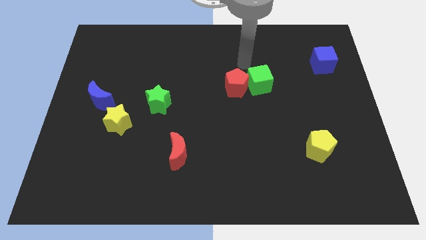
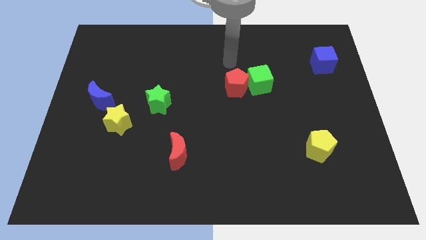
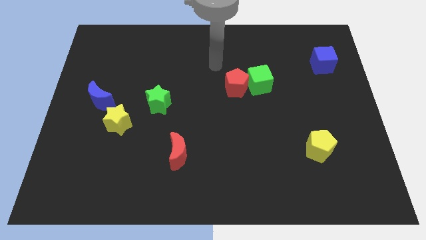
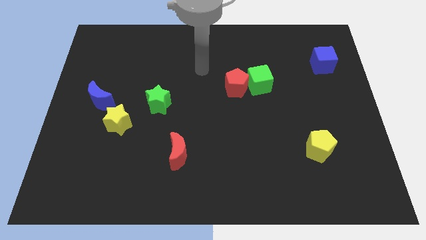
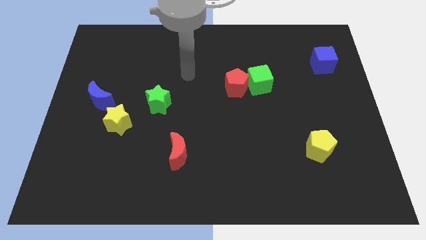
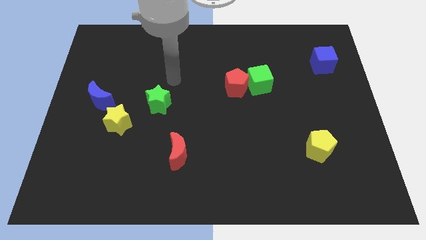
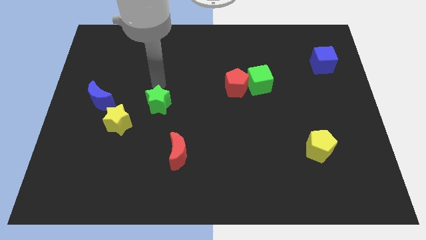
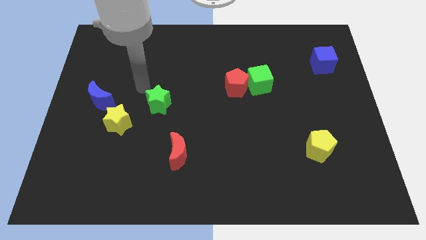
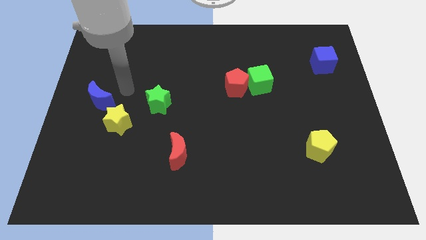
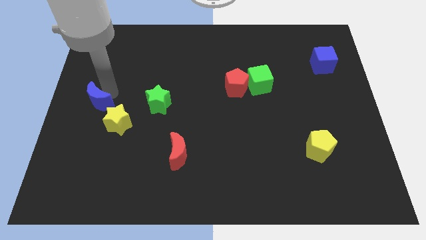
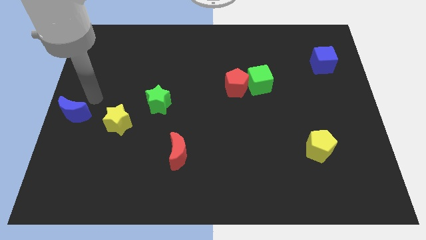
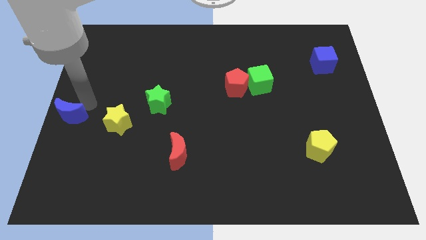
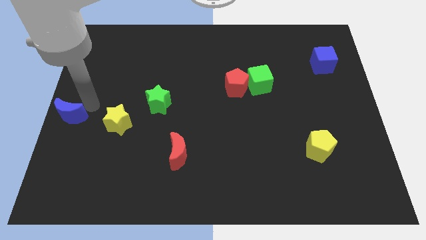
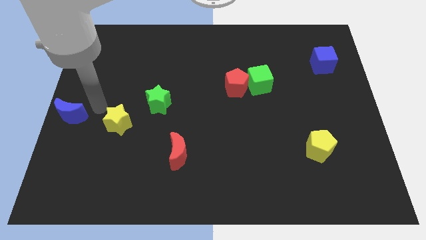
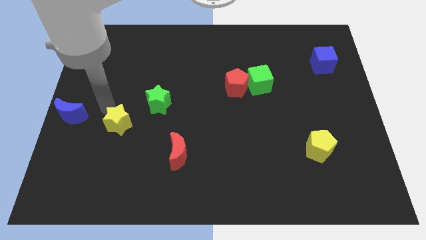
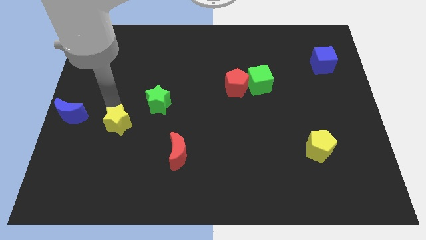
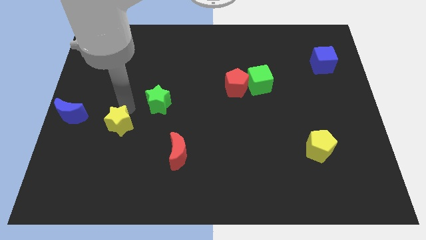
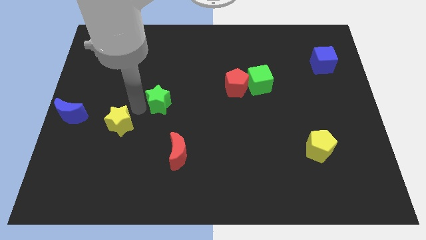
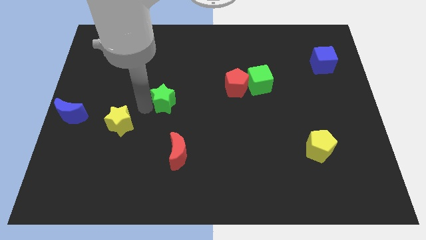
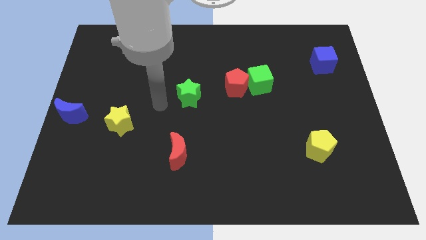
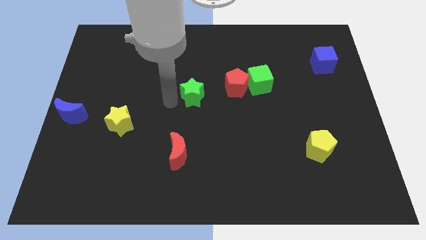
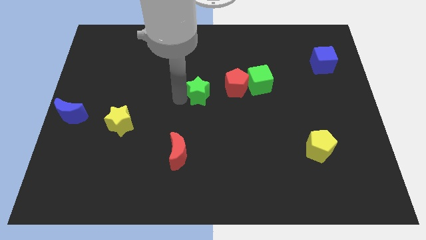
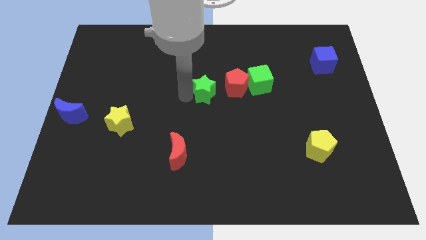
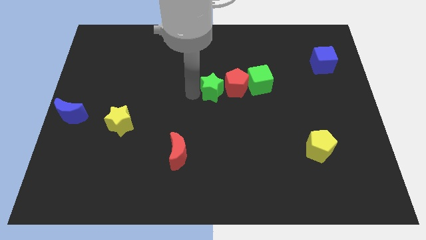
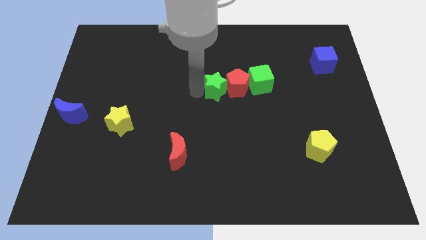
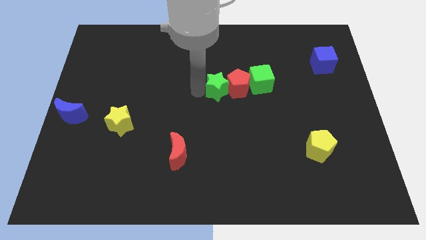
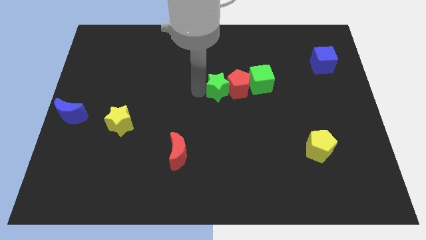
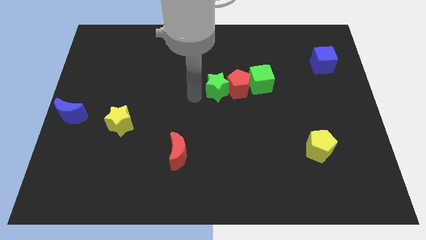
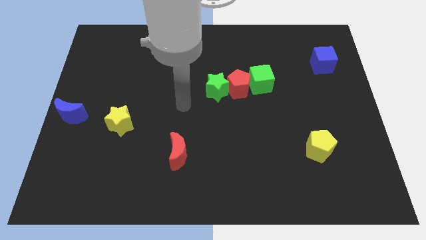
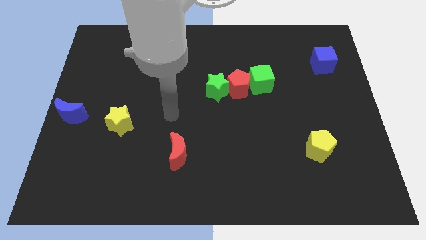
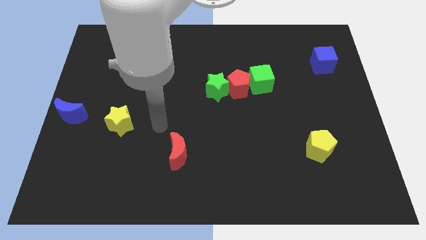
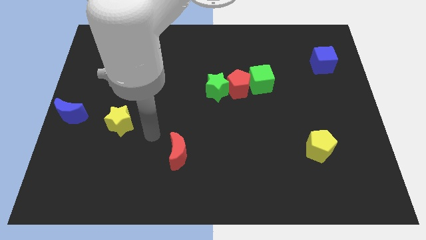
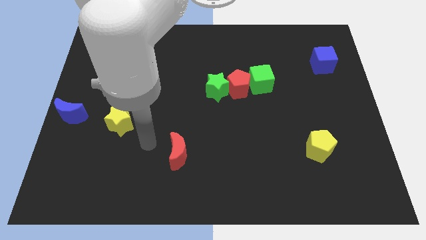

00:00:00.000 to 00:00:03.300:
slightly move blue moon towards left of yellow star

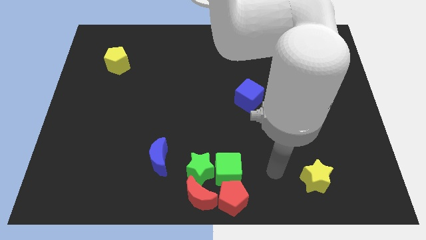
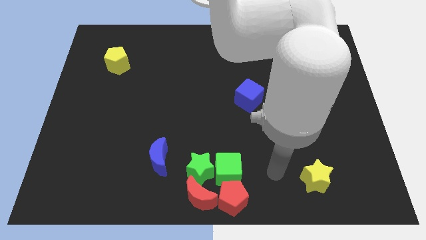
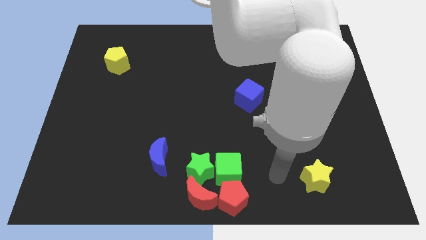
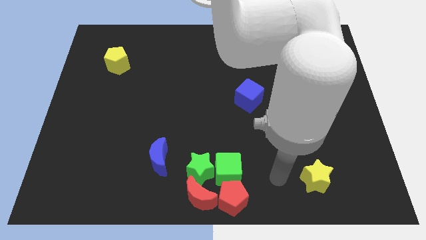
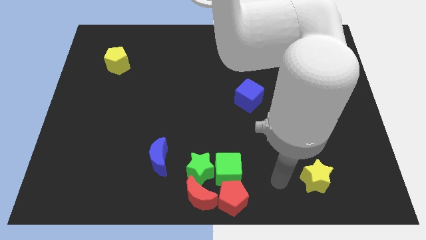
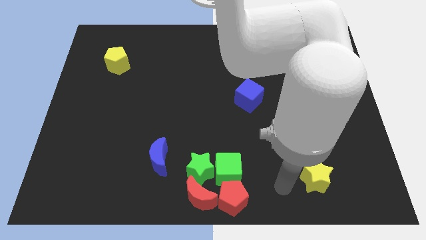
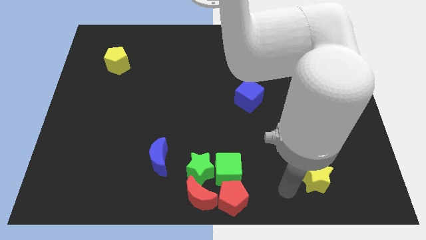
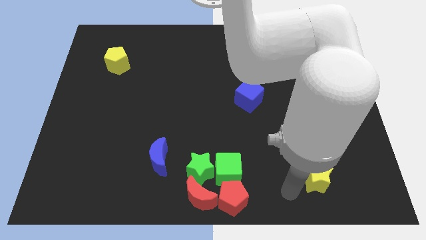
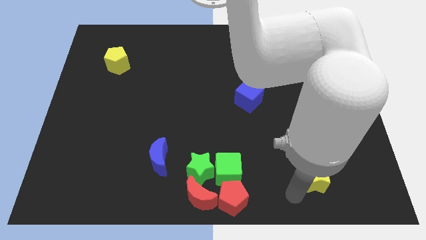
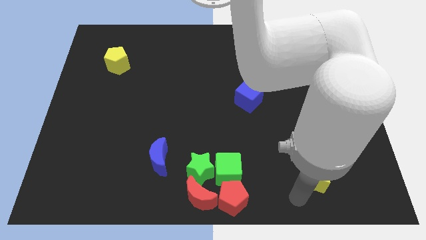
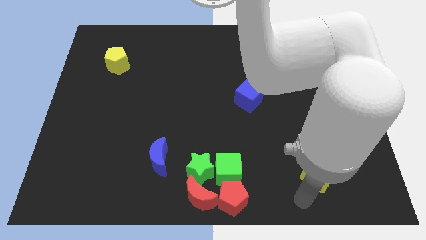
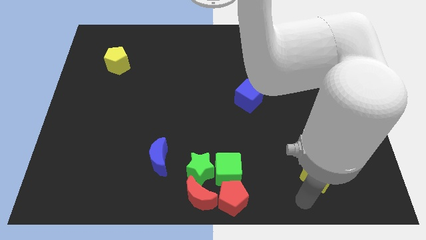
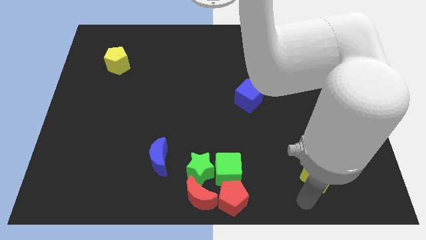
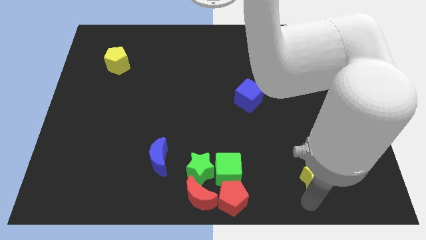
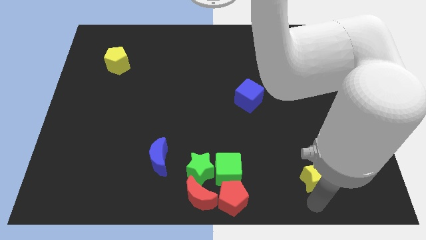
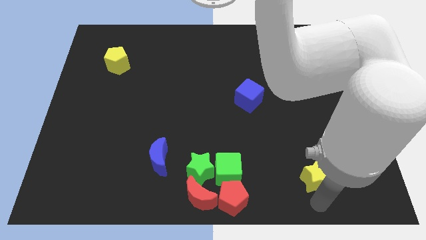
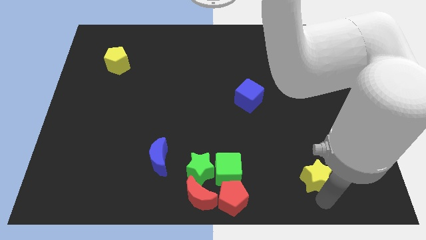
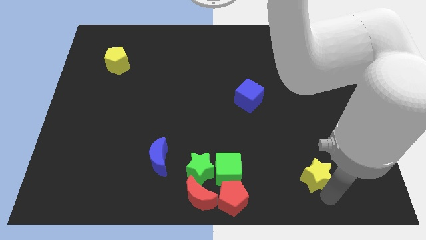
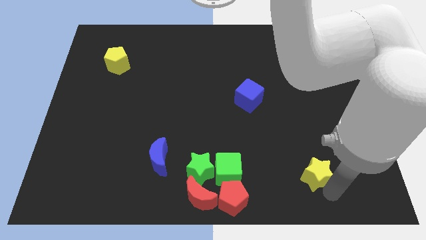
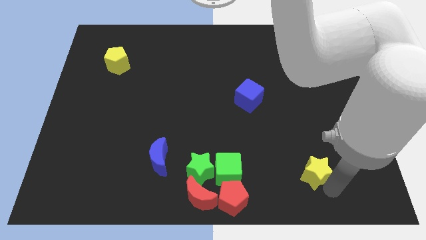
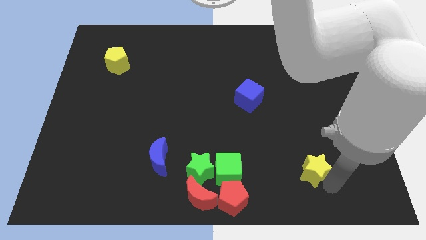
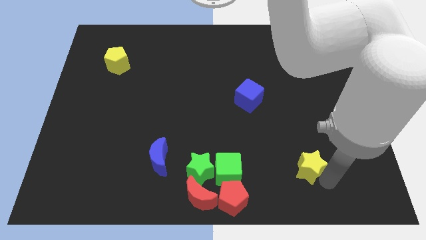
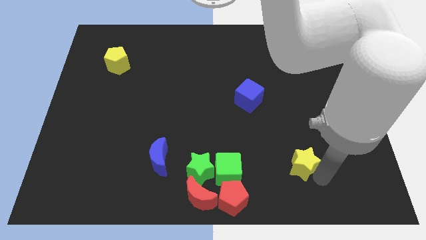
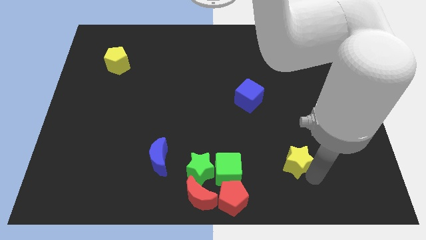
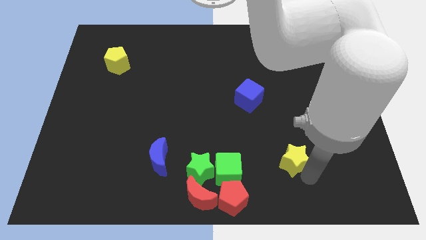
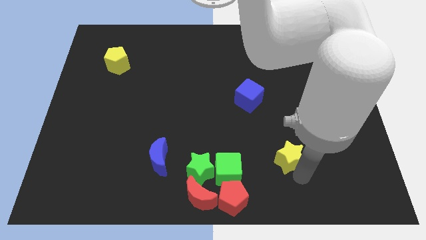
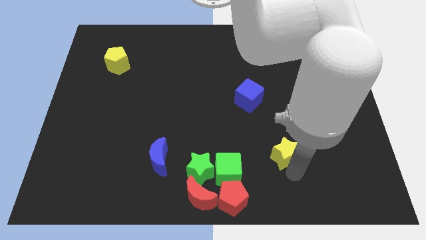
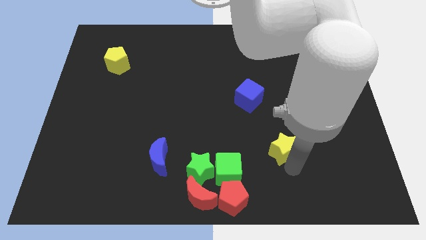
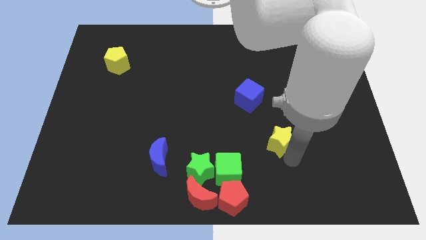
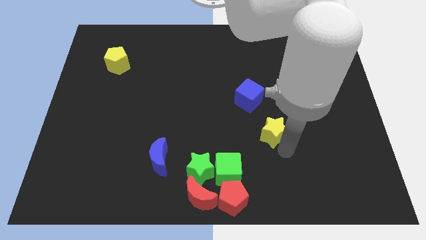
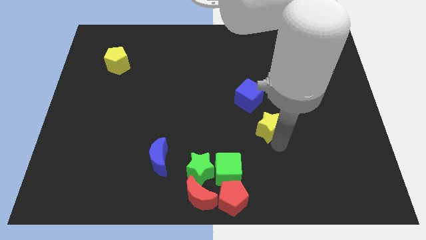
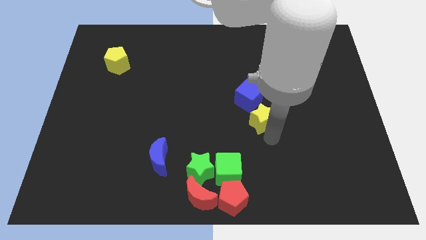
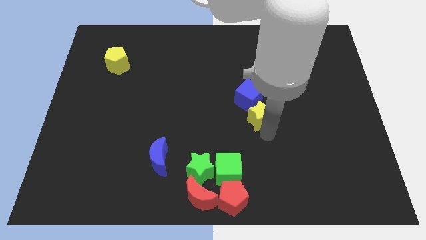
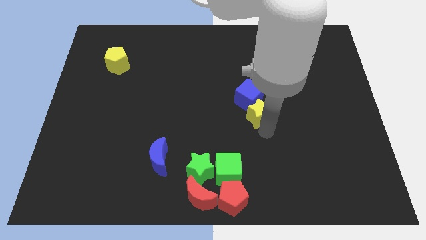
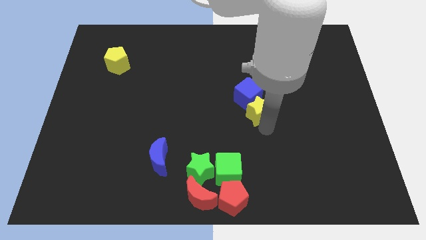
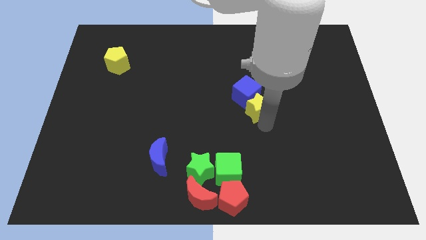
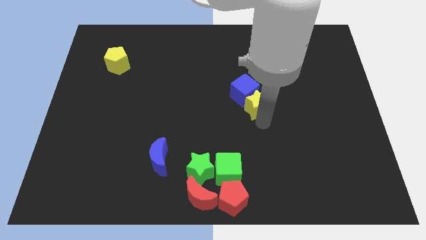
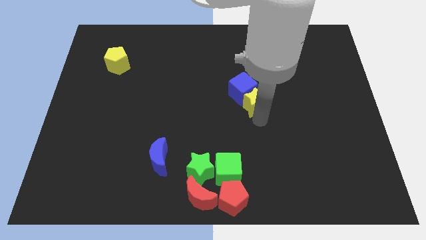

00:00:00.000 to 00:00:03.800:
put the yellow star into the blue cube

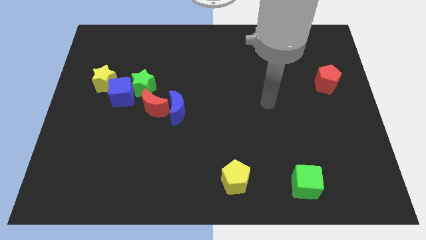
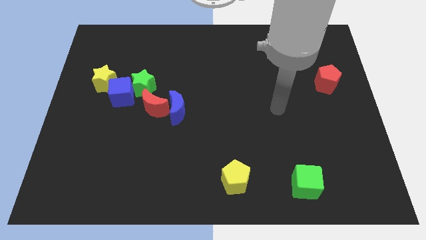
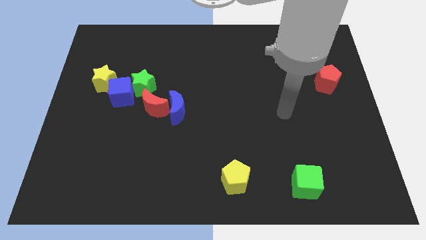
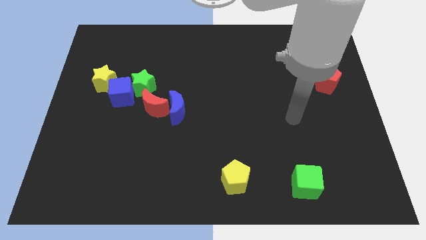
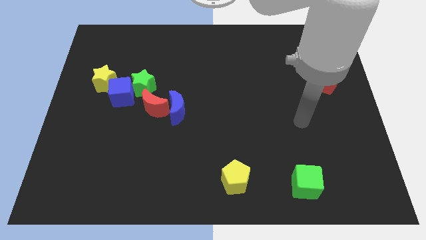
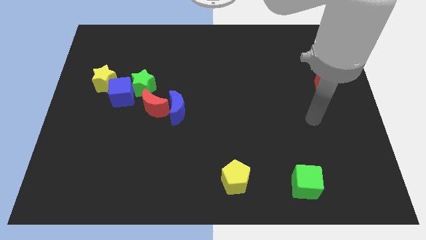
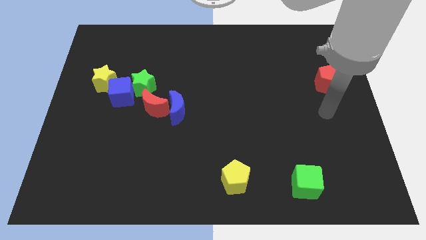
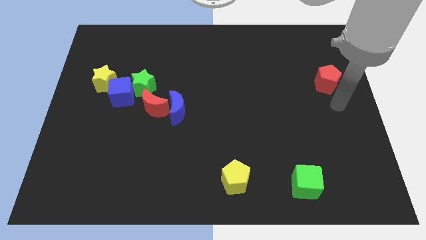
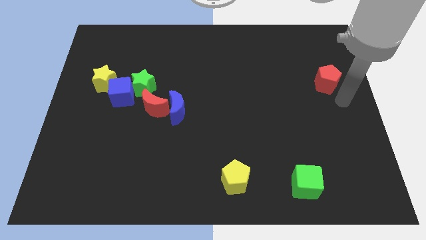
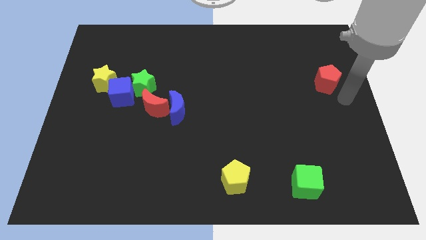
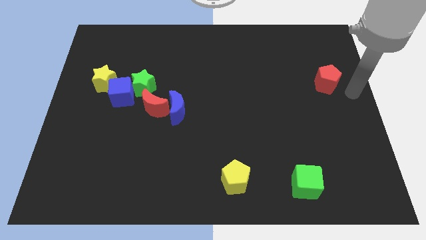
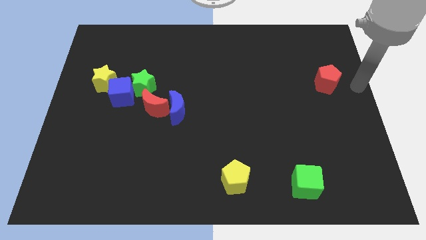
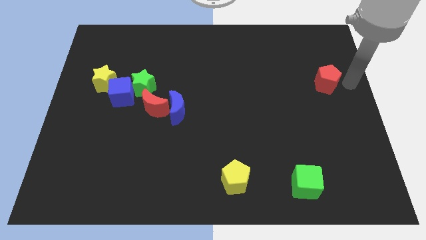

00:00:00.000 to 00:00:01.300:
place the your hand to the right of the red pentagon

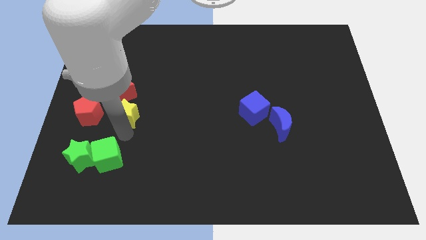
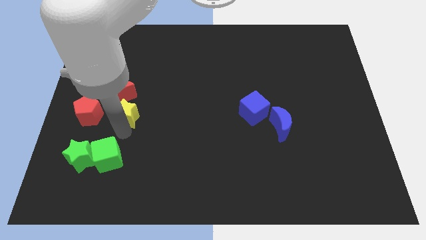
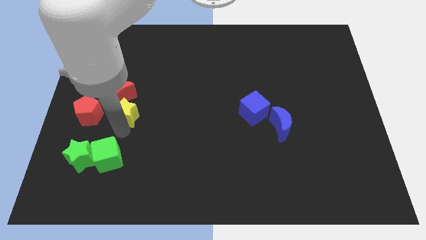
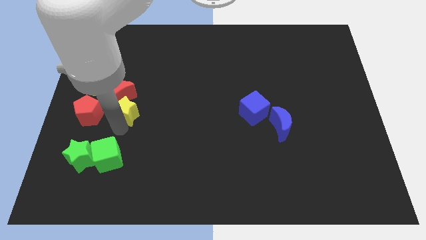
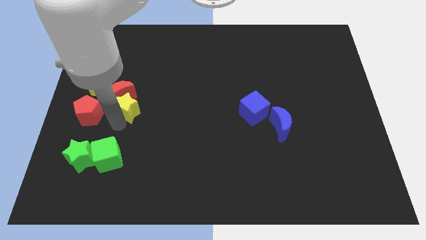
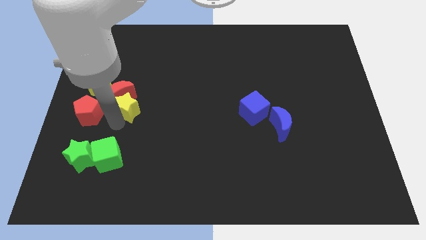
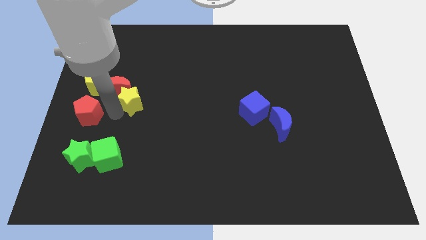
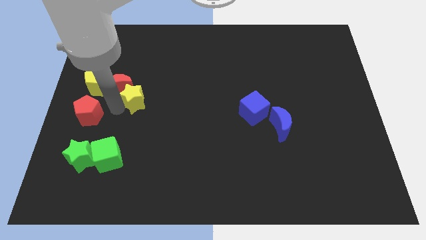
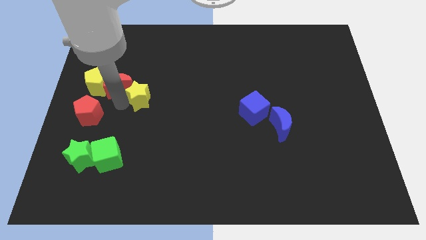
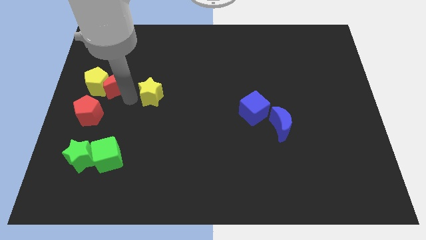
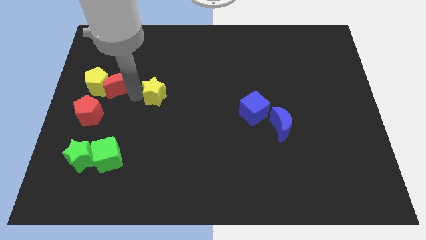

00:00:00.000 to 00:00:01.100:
move the yellow star to the right of the red crescent
